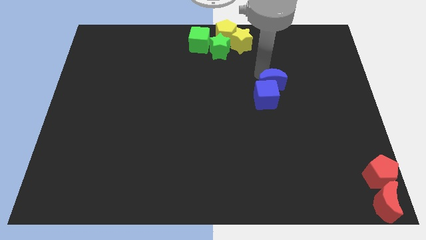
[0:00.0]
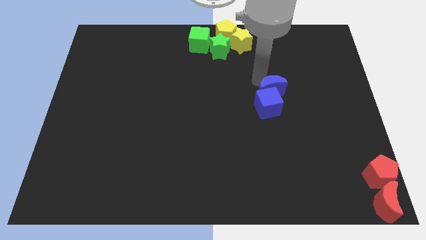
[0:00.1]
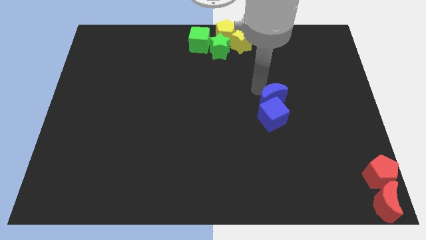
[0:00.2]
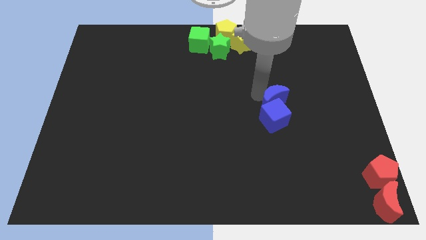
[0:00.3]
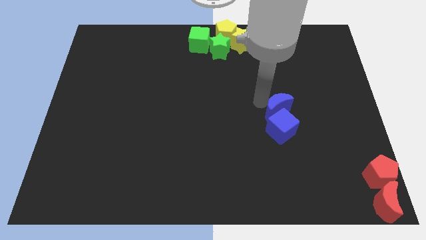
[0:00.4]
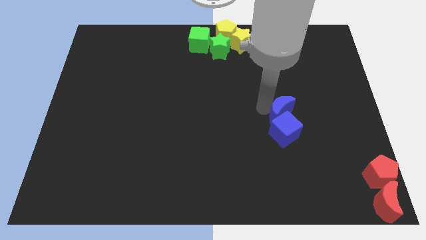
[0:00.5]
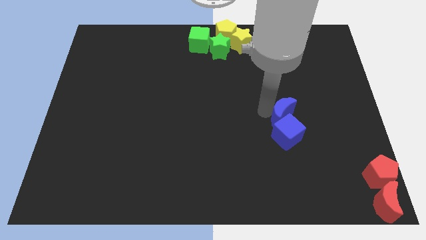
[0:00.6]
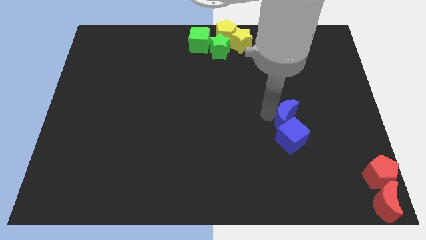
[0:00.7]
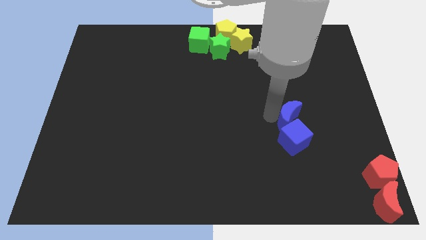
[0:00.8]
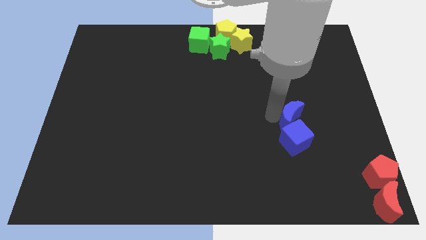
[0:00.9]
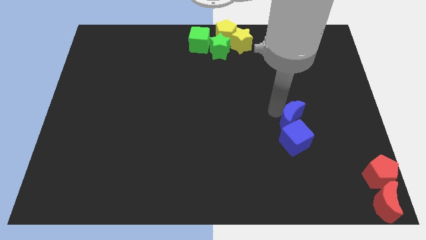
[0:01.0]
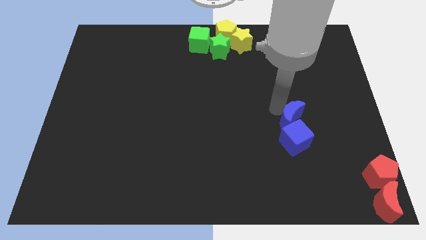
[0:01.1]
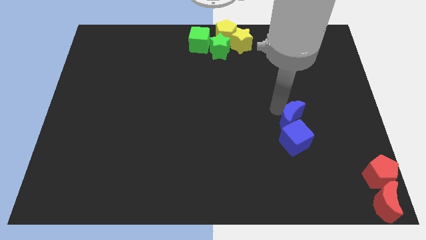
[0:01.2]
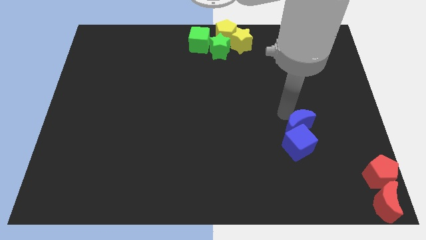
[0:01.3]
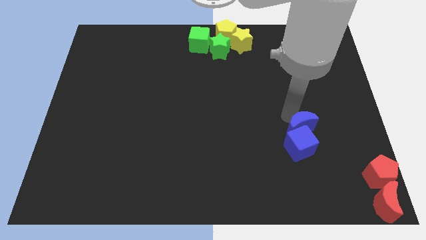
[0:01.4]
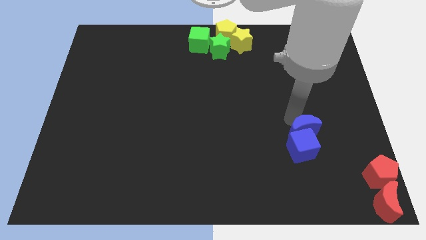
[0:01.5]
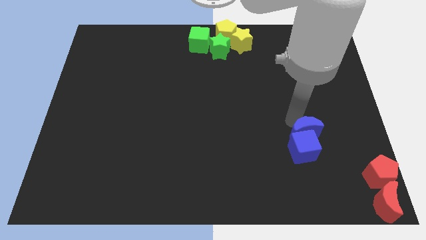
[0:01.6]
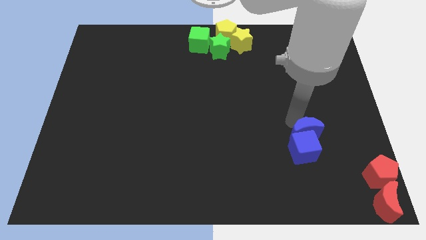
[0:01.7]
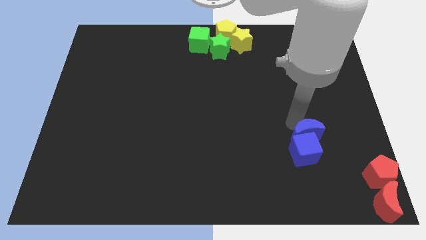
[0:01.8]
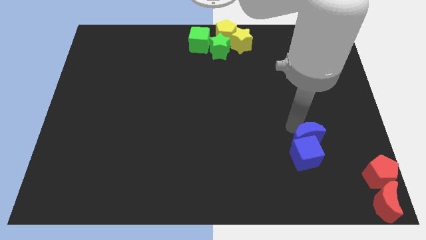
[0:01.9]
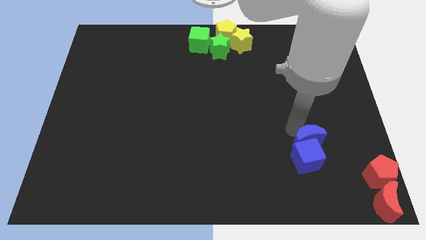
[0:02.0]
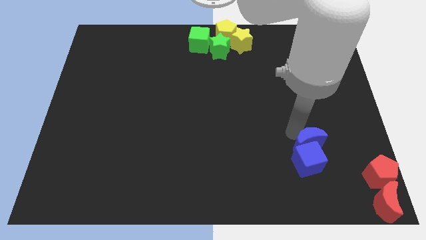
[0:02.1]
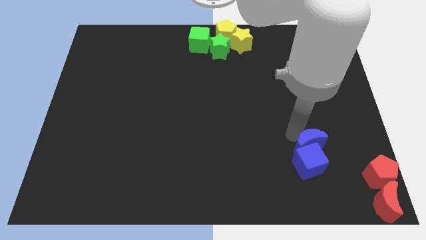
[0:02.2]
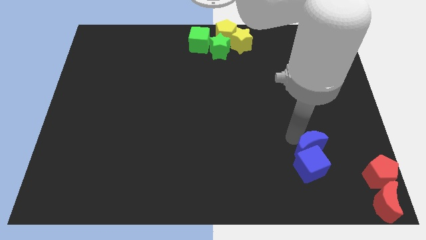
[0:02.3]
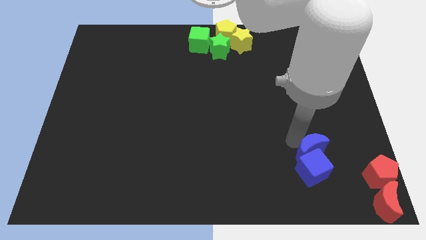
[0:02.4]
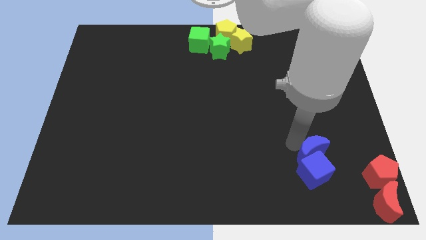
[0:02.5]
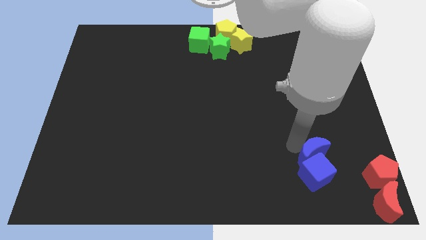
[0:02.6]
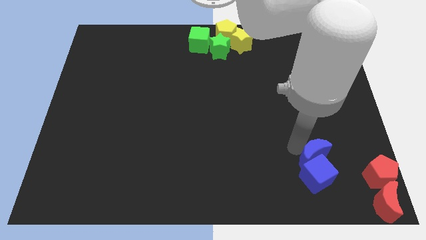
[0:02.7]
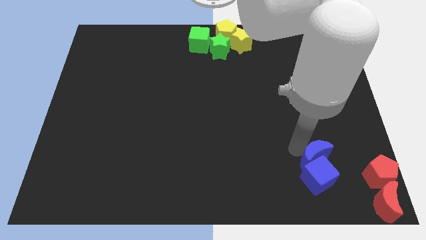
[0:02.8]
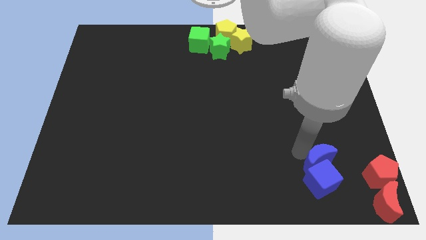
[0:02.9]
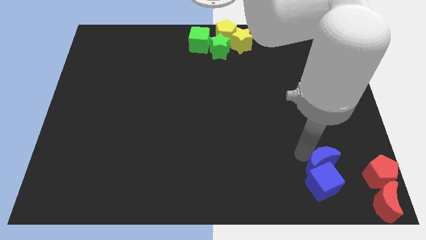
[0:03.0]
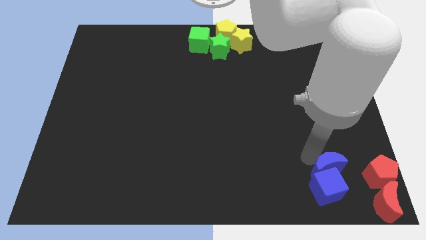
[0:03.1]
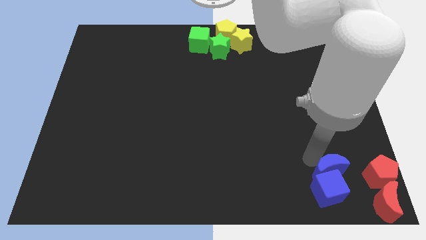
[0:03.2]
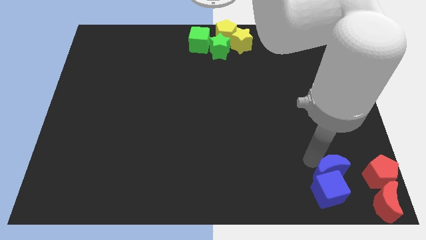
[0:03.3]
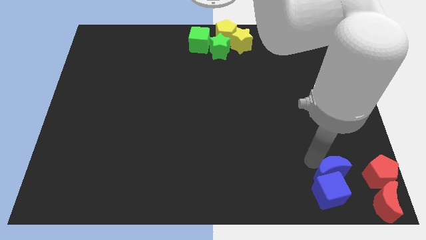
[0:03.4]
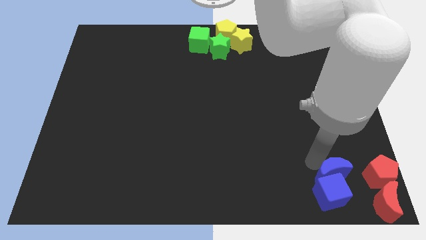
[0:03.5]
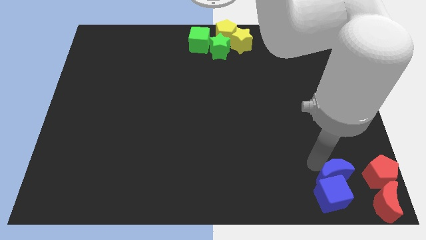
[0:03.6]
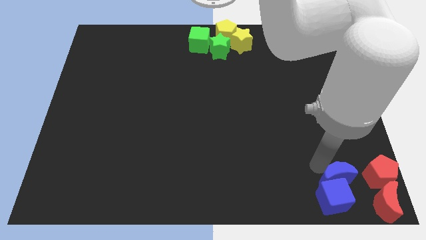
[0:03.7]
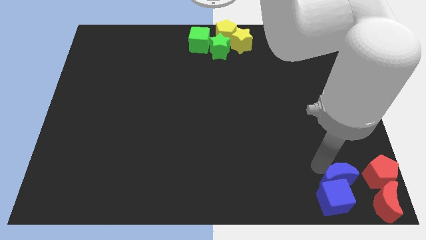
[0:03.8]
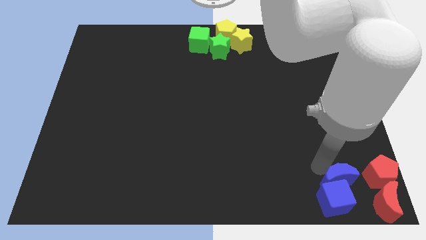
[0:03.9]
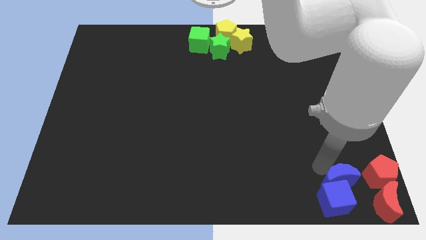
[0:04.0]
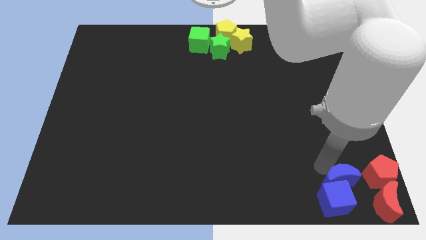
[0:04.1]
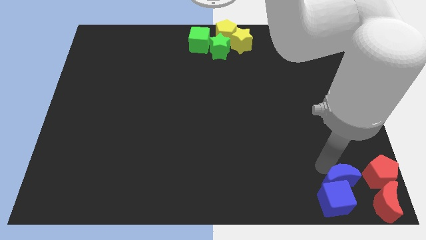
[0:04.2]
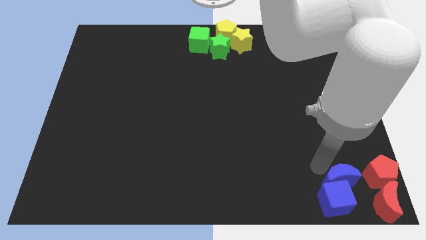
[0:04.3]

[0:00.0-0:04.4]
place the blue blocks to the left of the red blocks

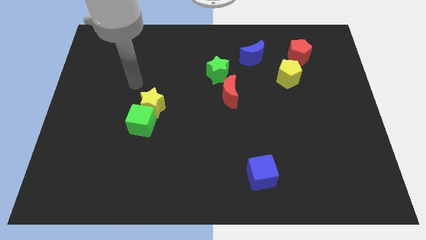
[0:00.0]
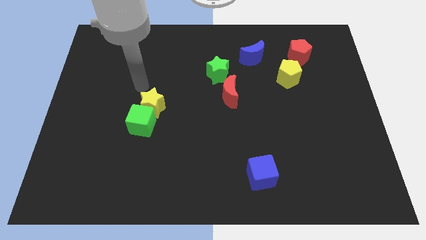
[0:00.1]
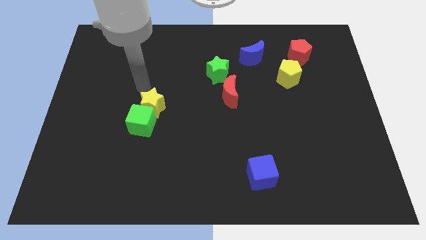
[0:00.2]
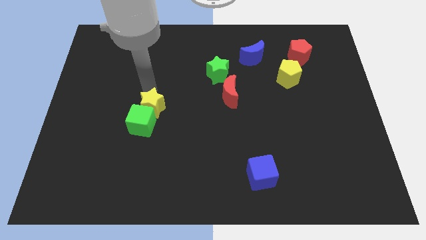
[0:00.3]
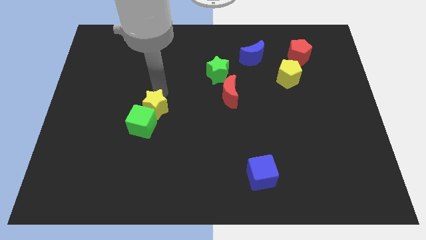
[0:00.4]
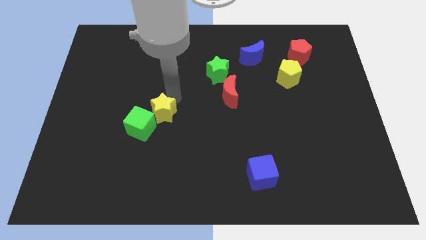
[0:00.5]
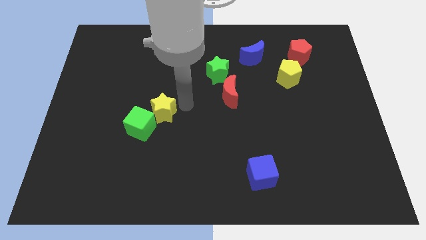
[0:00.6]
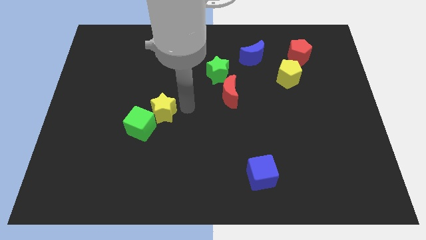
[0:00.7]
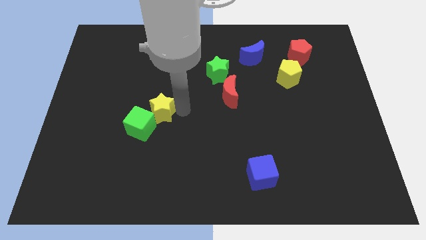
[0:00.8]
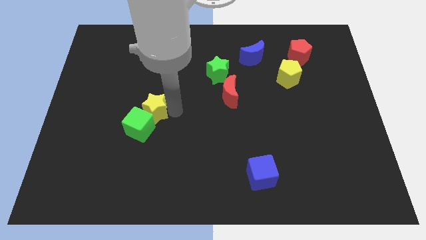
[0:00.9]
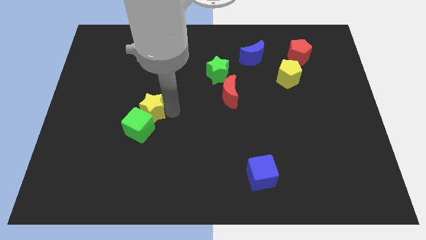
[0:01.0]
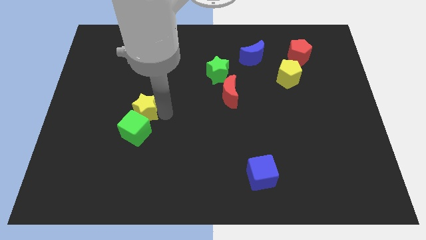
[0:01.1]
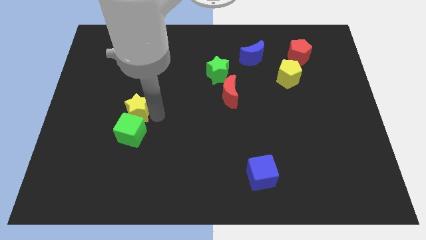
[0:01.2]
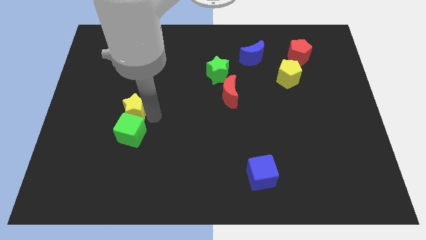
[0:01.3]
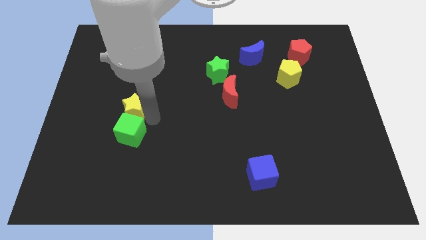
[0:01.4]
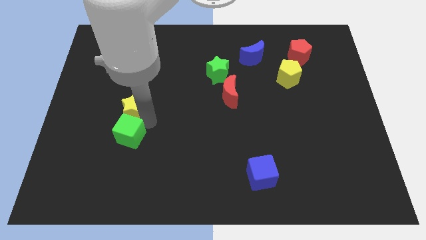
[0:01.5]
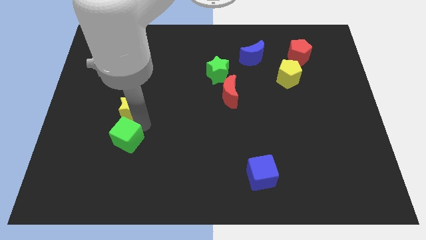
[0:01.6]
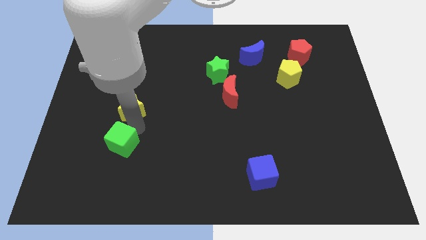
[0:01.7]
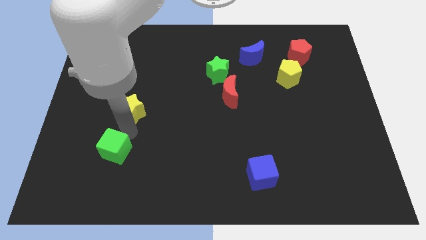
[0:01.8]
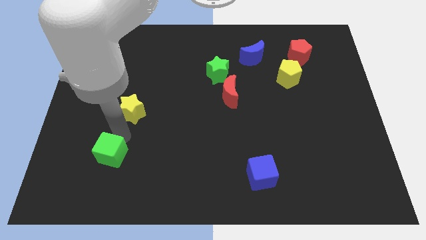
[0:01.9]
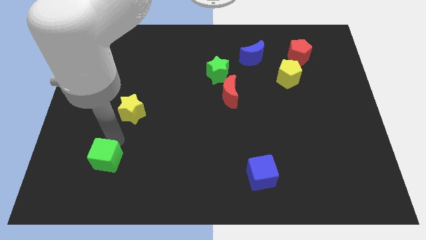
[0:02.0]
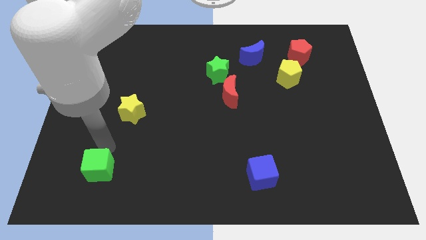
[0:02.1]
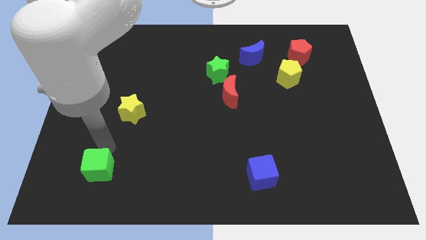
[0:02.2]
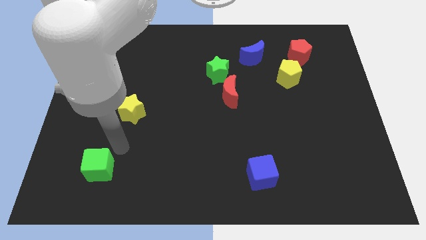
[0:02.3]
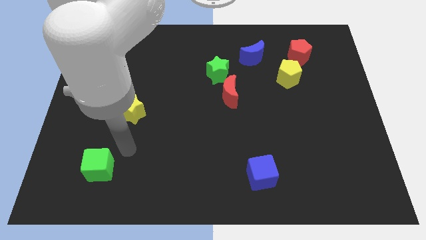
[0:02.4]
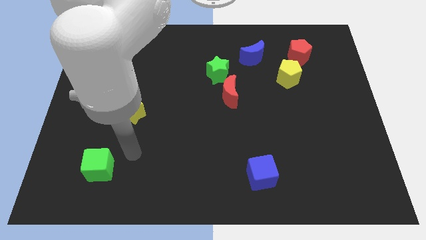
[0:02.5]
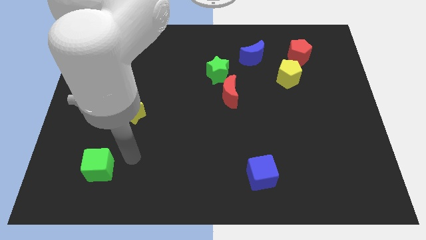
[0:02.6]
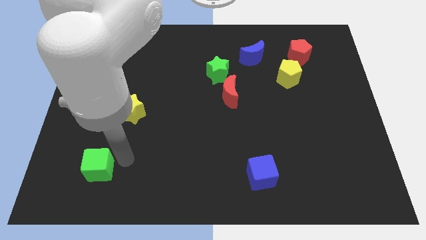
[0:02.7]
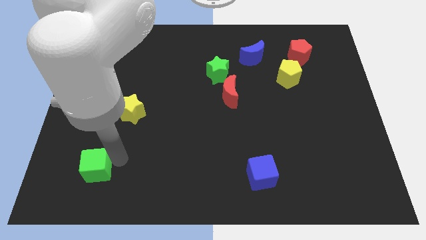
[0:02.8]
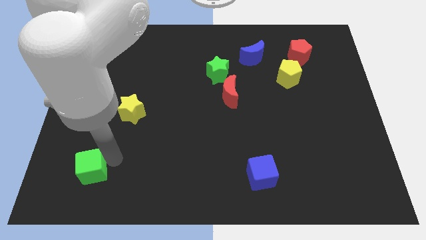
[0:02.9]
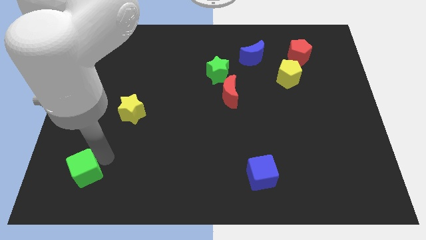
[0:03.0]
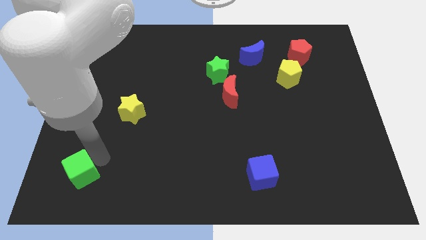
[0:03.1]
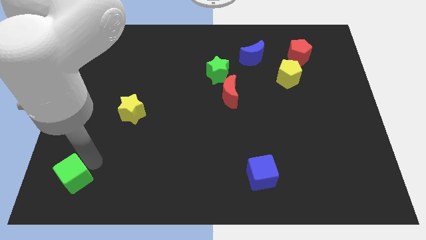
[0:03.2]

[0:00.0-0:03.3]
separate green cube from yellow star

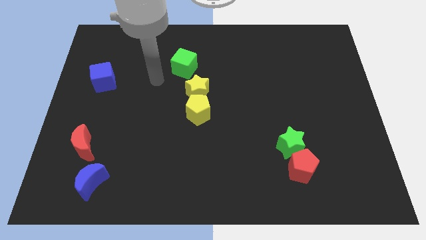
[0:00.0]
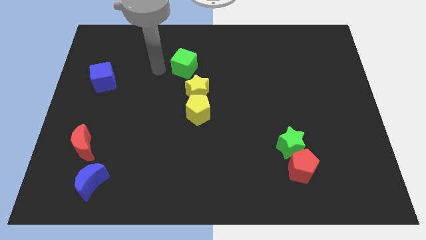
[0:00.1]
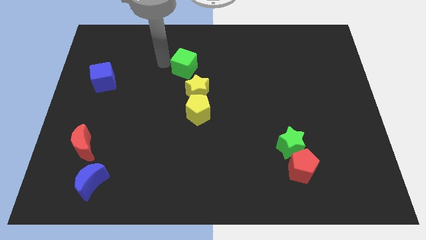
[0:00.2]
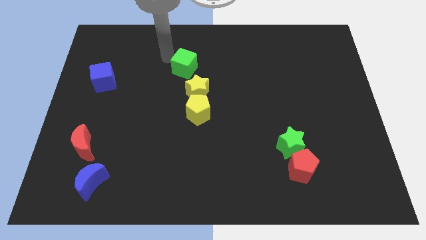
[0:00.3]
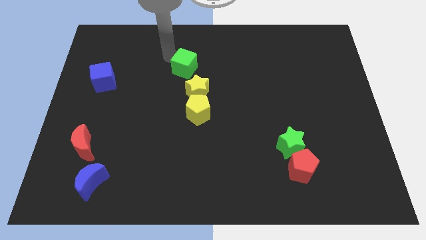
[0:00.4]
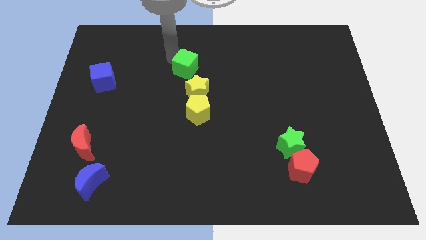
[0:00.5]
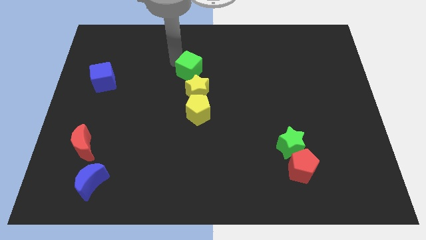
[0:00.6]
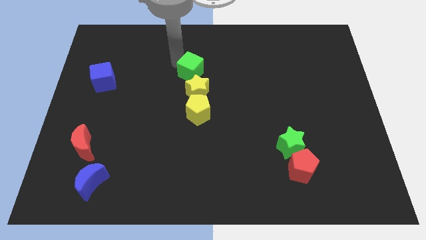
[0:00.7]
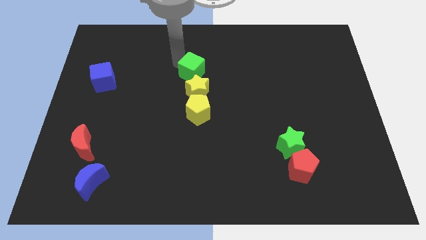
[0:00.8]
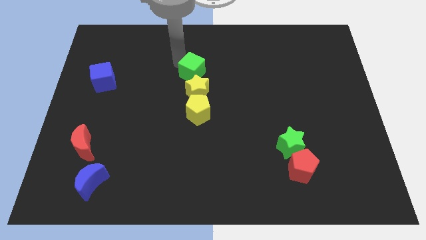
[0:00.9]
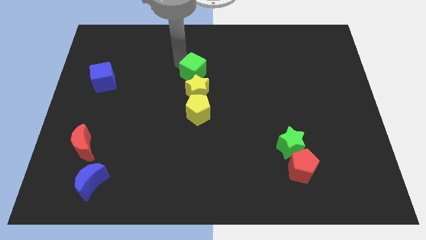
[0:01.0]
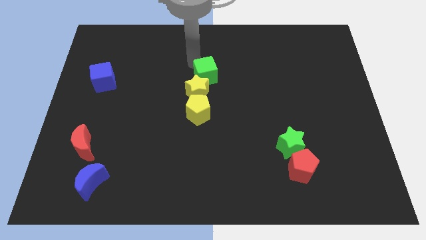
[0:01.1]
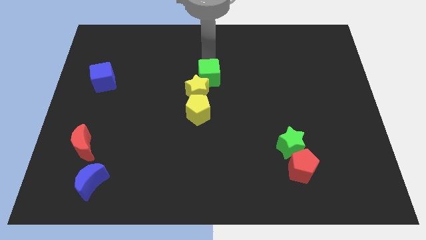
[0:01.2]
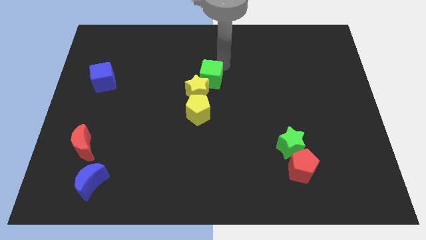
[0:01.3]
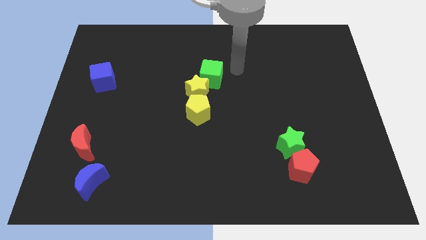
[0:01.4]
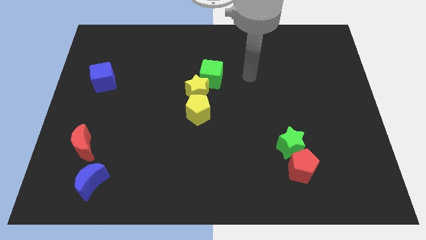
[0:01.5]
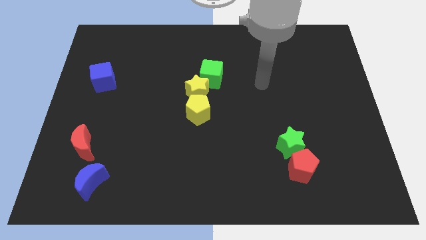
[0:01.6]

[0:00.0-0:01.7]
move the green cube to the right top side of the yellow star
